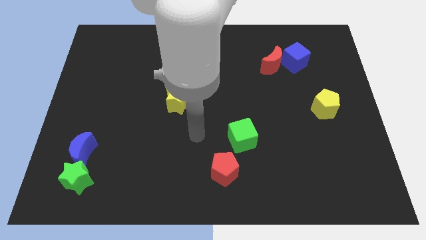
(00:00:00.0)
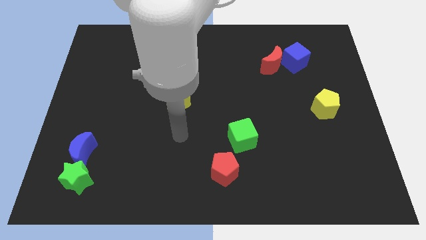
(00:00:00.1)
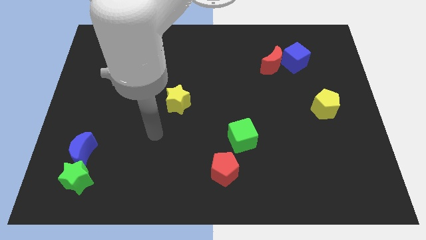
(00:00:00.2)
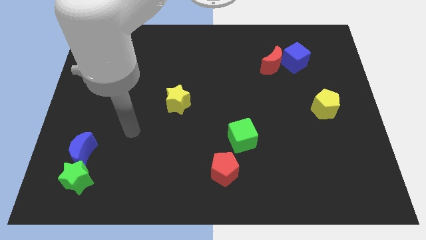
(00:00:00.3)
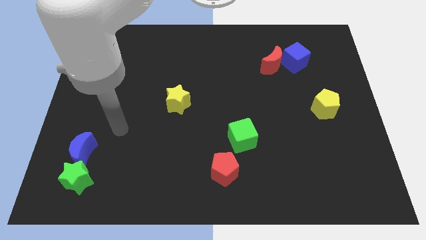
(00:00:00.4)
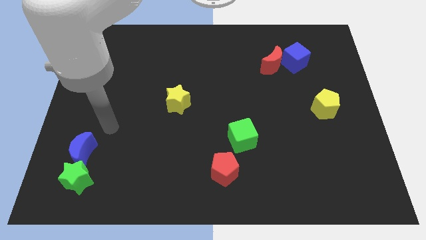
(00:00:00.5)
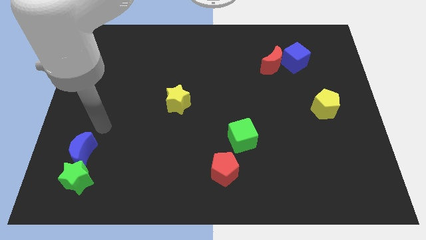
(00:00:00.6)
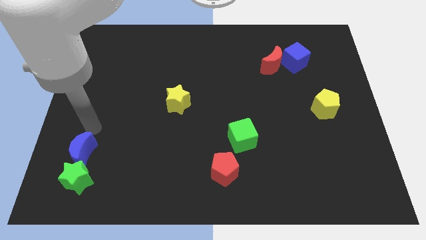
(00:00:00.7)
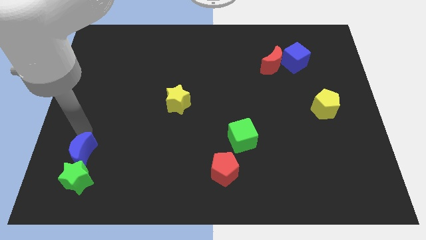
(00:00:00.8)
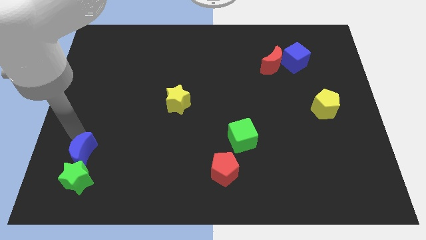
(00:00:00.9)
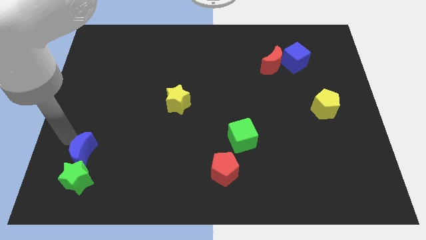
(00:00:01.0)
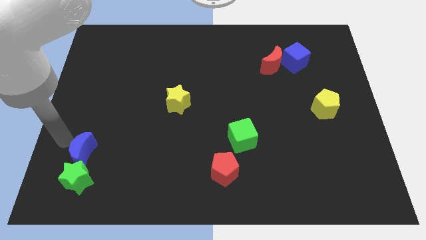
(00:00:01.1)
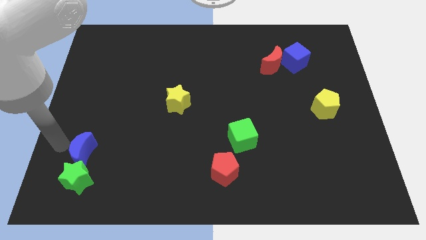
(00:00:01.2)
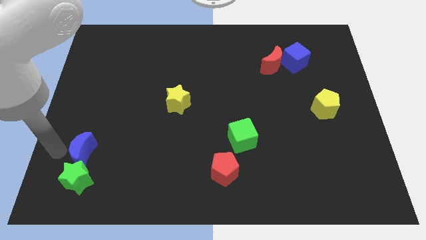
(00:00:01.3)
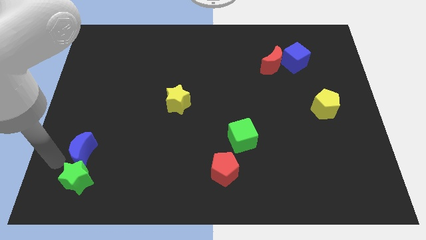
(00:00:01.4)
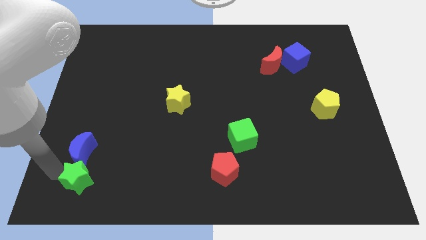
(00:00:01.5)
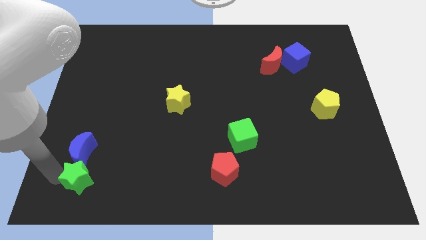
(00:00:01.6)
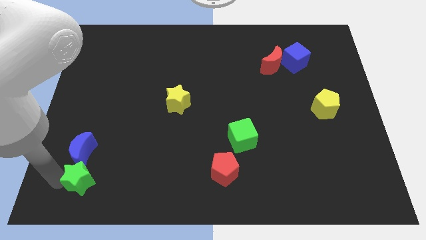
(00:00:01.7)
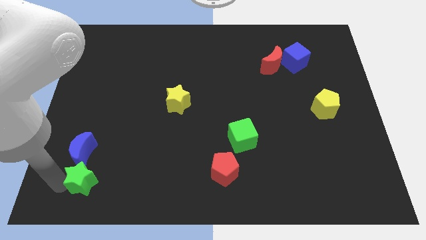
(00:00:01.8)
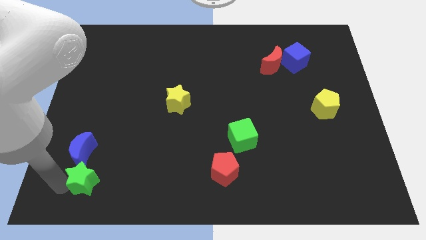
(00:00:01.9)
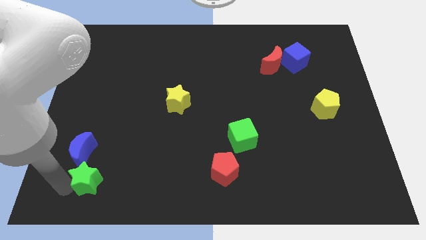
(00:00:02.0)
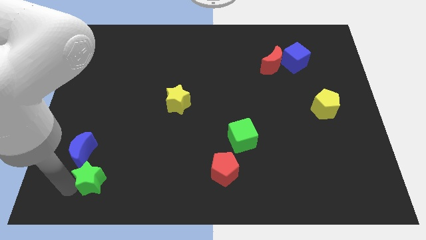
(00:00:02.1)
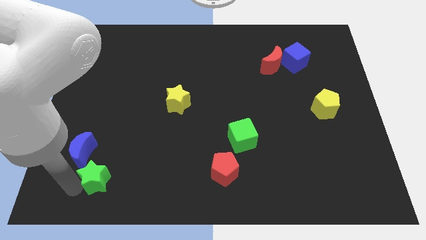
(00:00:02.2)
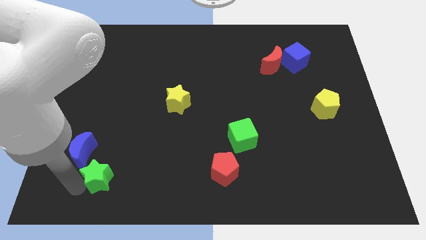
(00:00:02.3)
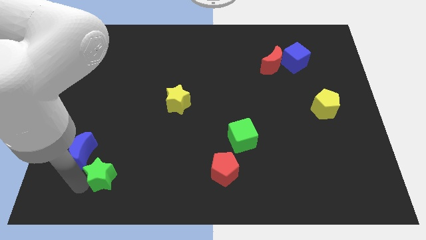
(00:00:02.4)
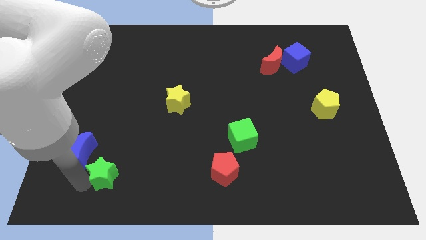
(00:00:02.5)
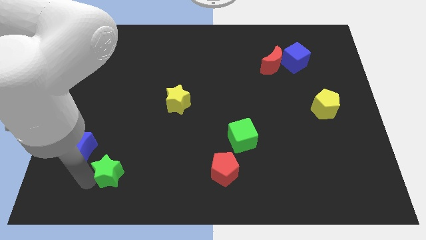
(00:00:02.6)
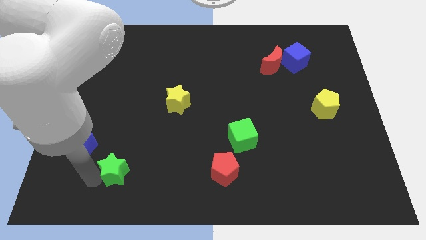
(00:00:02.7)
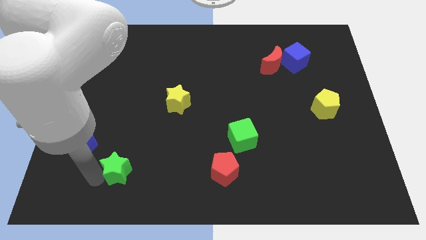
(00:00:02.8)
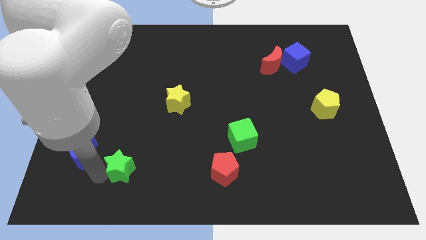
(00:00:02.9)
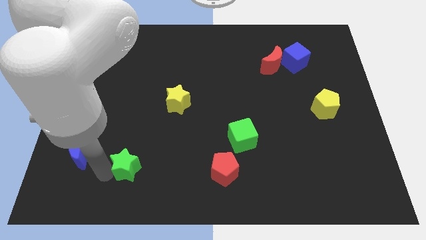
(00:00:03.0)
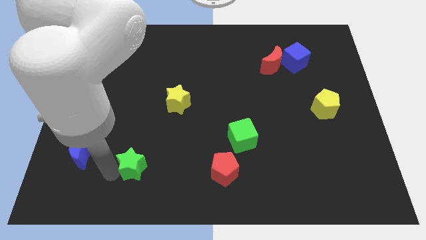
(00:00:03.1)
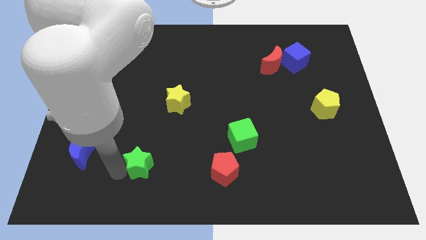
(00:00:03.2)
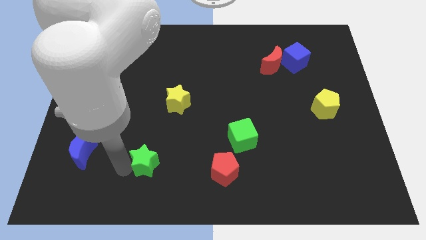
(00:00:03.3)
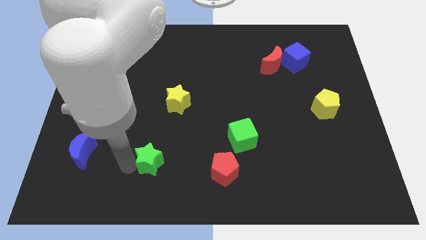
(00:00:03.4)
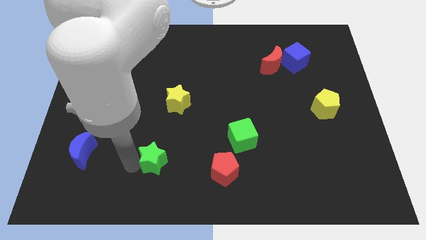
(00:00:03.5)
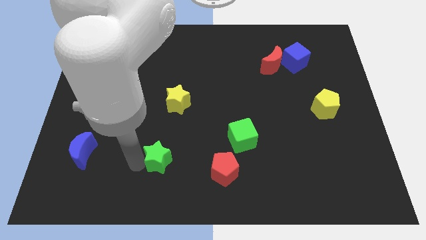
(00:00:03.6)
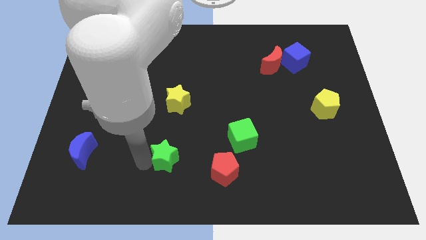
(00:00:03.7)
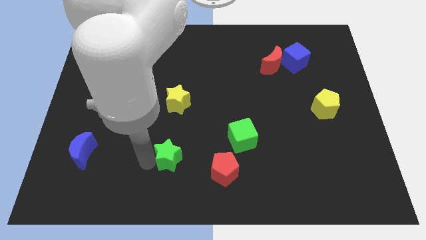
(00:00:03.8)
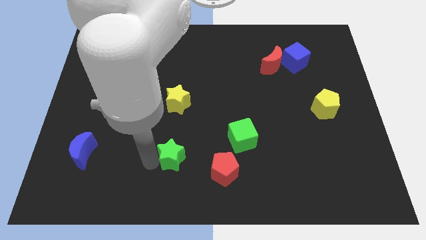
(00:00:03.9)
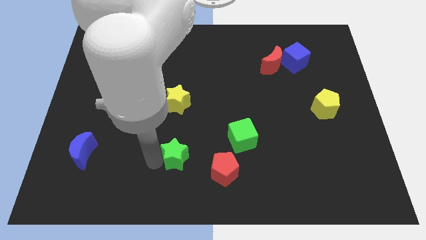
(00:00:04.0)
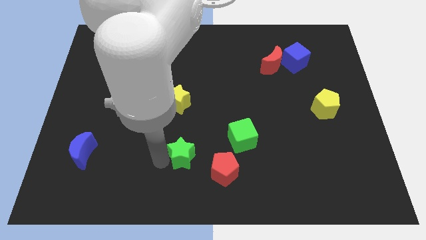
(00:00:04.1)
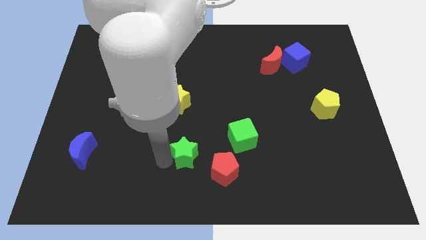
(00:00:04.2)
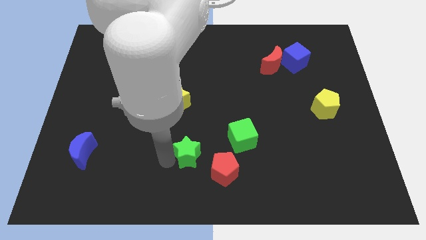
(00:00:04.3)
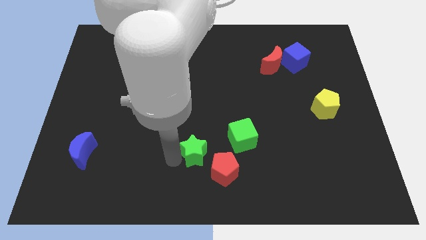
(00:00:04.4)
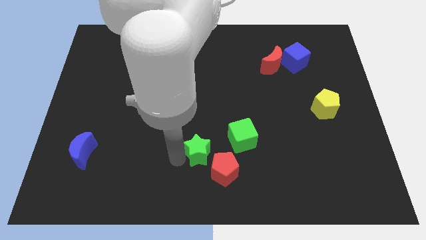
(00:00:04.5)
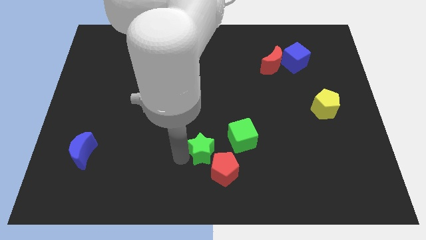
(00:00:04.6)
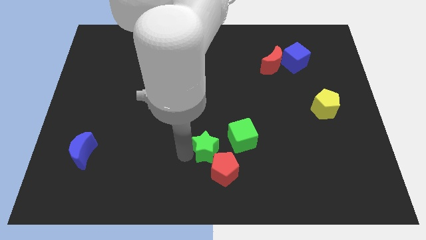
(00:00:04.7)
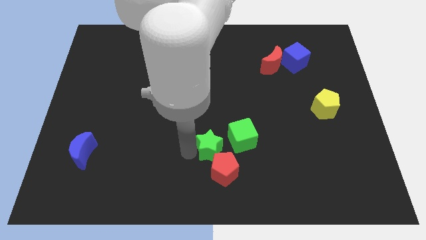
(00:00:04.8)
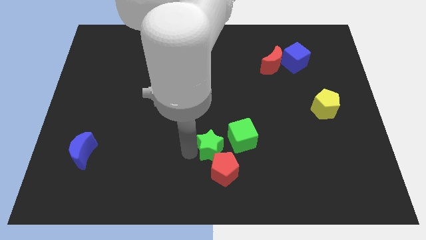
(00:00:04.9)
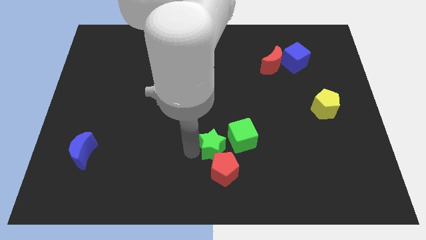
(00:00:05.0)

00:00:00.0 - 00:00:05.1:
put the green star towards the red pentagon

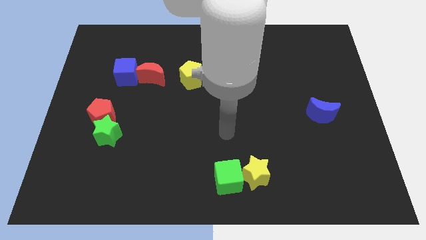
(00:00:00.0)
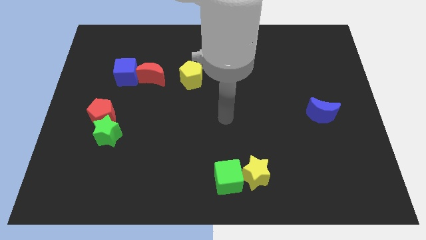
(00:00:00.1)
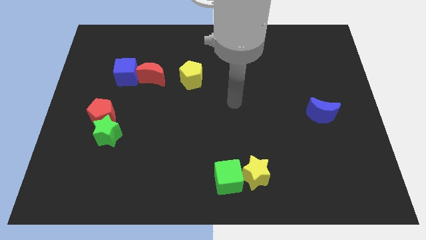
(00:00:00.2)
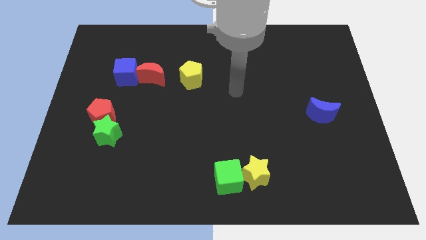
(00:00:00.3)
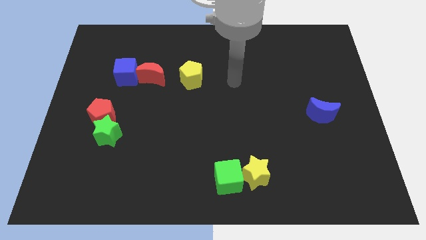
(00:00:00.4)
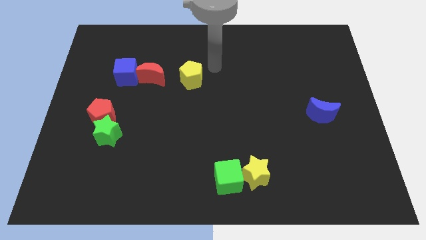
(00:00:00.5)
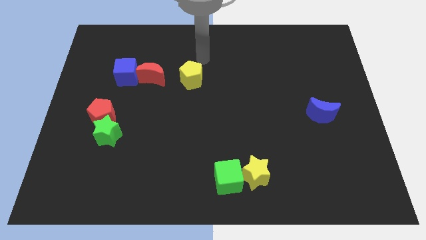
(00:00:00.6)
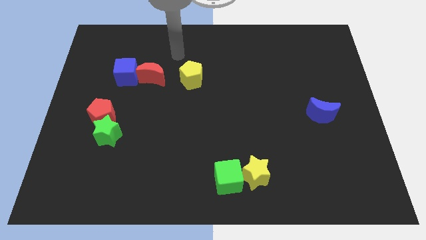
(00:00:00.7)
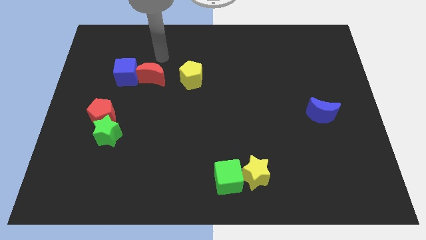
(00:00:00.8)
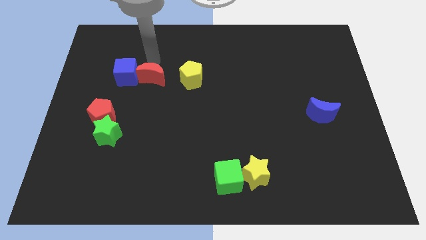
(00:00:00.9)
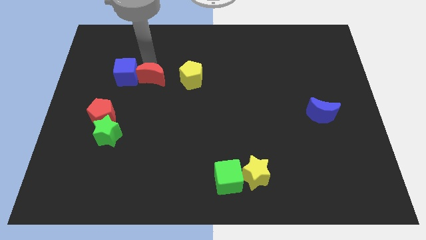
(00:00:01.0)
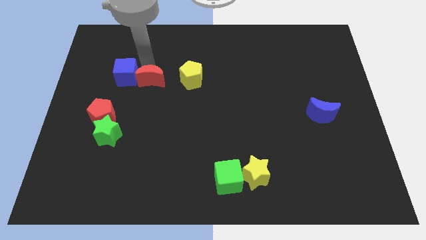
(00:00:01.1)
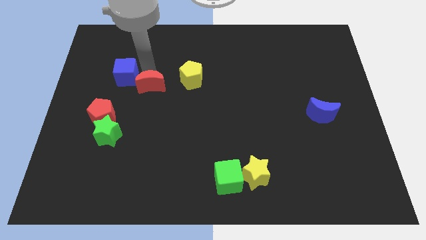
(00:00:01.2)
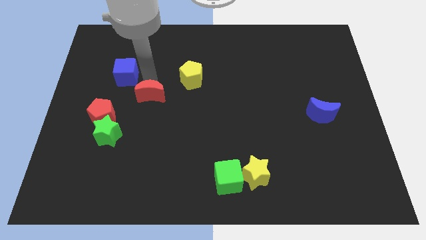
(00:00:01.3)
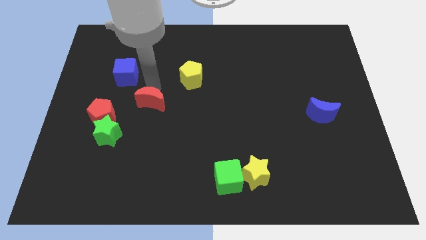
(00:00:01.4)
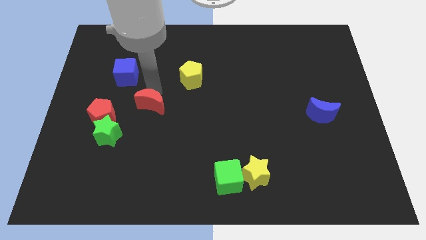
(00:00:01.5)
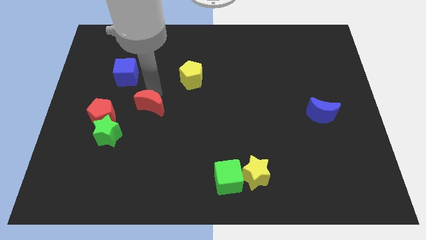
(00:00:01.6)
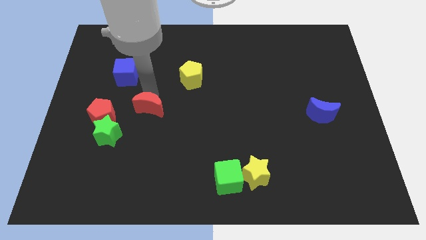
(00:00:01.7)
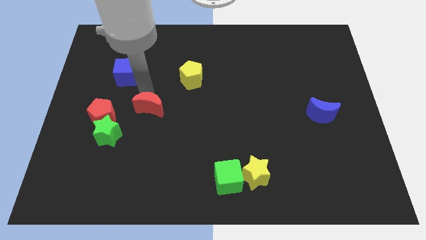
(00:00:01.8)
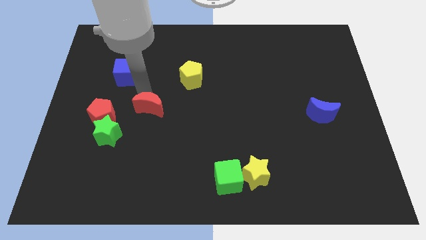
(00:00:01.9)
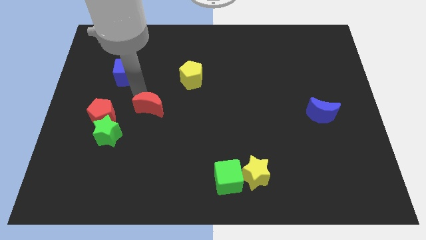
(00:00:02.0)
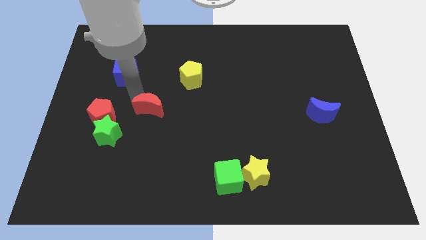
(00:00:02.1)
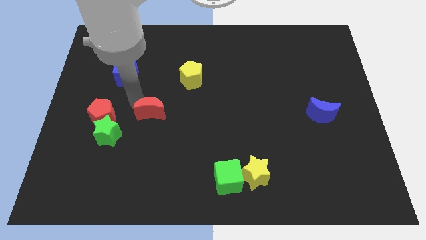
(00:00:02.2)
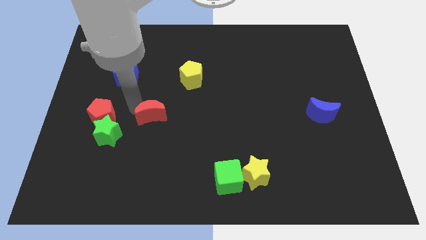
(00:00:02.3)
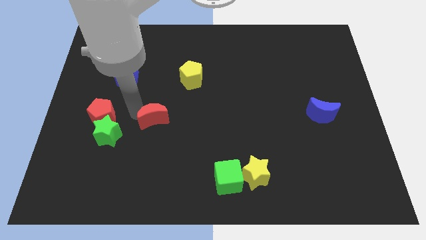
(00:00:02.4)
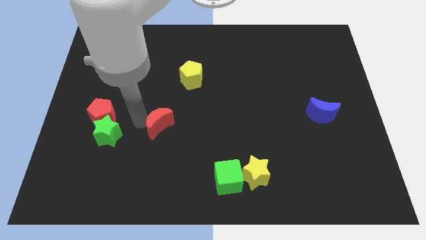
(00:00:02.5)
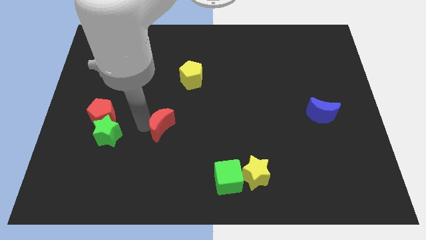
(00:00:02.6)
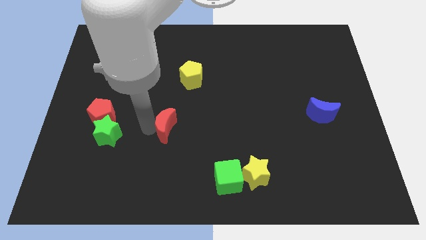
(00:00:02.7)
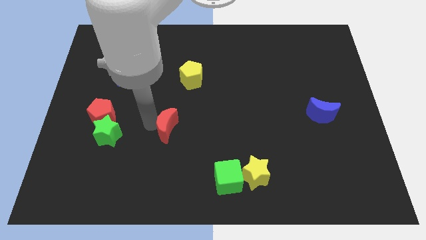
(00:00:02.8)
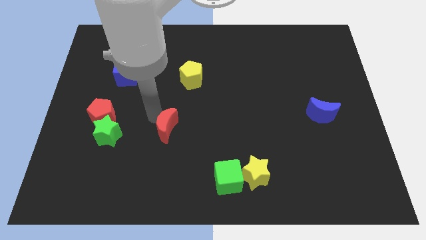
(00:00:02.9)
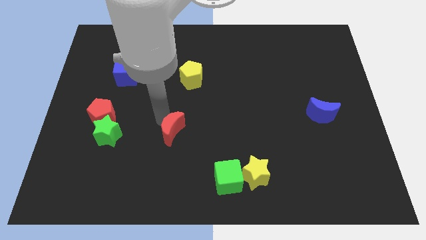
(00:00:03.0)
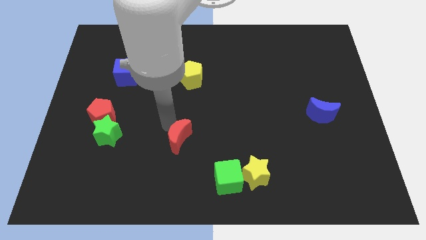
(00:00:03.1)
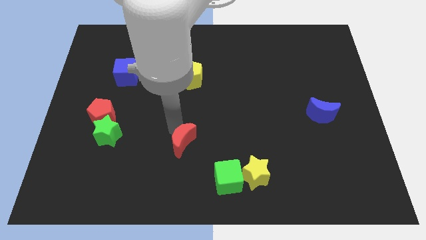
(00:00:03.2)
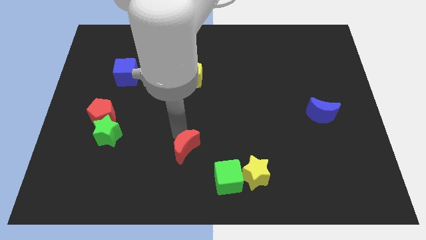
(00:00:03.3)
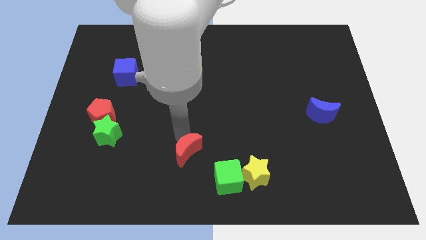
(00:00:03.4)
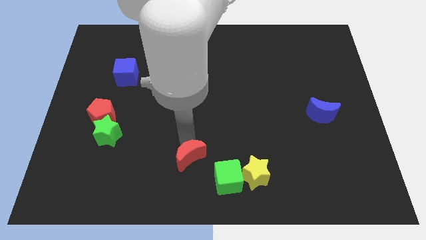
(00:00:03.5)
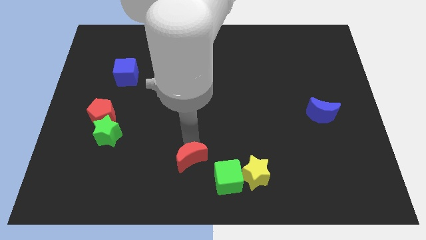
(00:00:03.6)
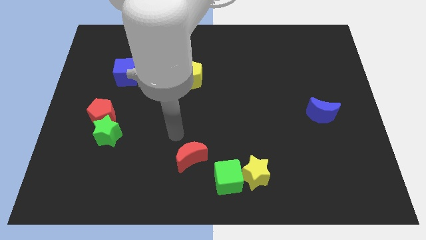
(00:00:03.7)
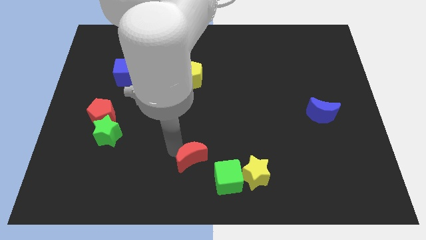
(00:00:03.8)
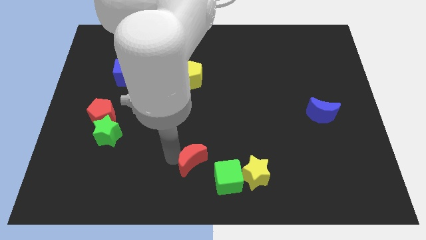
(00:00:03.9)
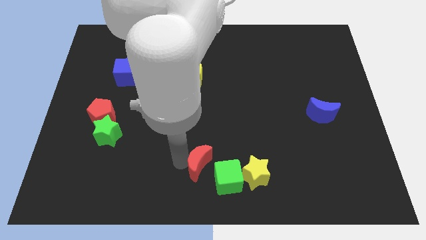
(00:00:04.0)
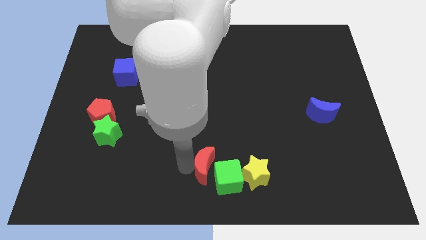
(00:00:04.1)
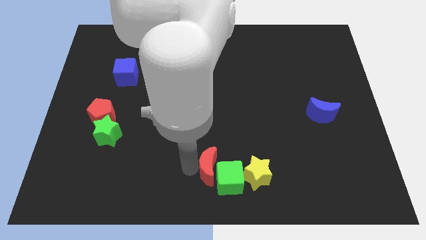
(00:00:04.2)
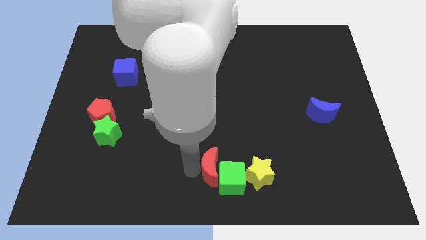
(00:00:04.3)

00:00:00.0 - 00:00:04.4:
put the red moon next to the green cube
